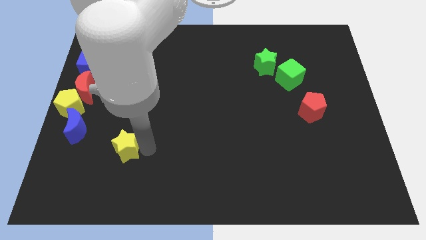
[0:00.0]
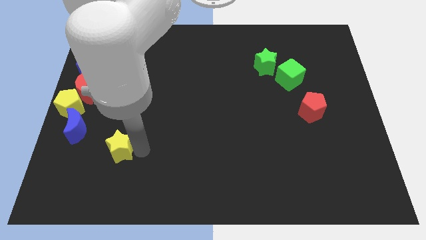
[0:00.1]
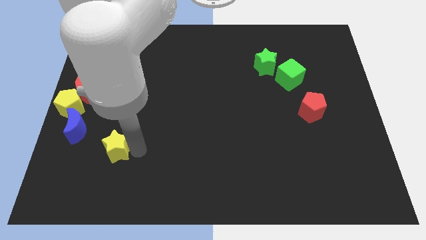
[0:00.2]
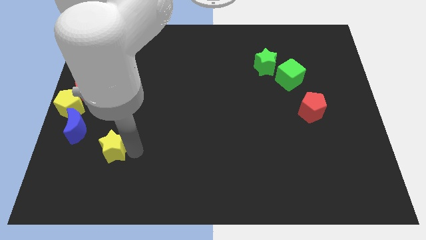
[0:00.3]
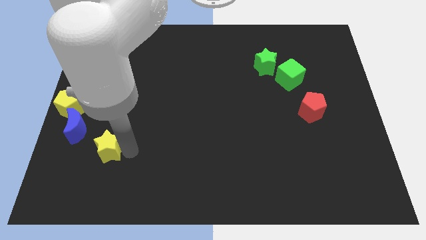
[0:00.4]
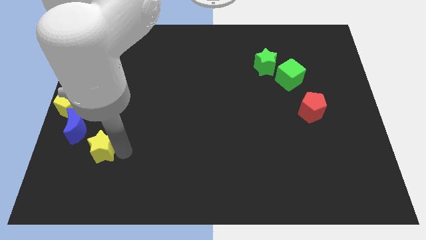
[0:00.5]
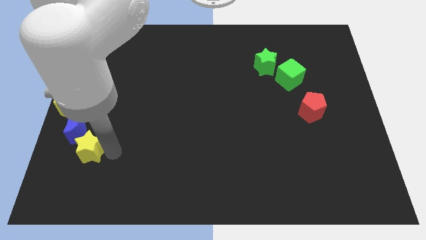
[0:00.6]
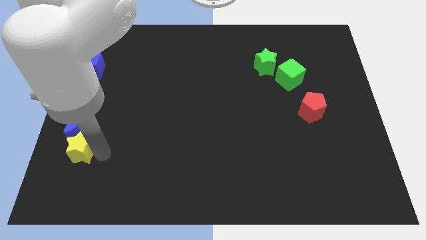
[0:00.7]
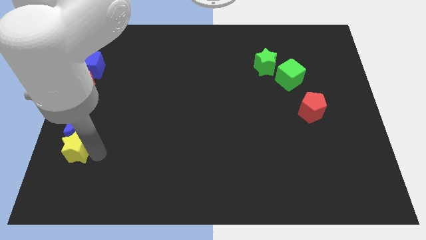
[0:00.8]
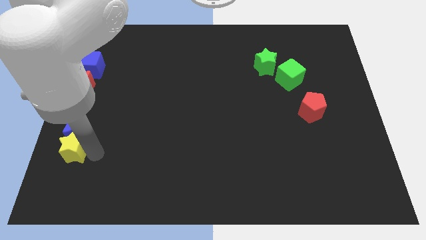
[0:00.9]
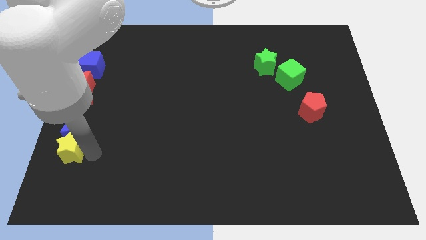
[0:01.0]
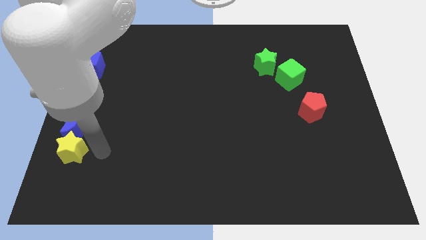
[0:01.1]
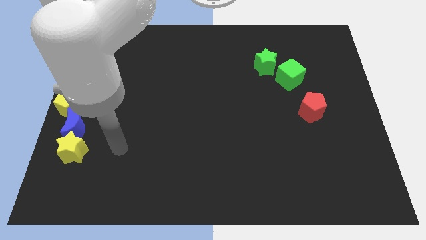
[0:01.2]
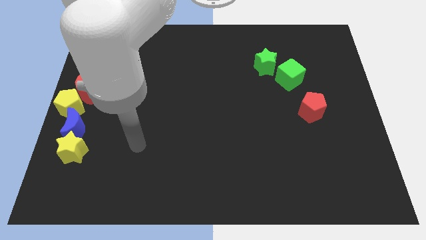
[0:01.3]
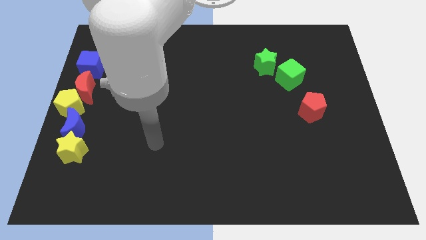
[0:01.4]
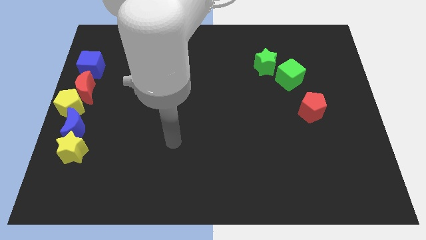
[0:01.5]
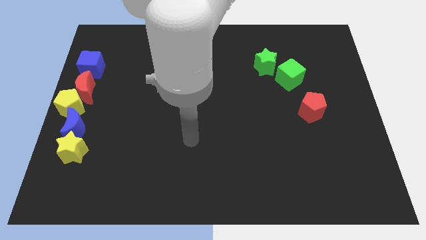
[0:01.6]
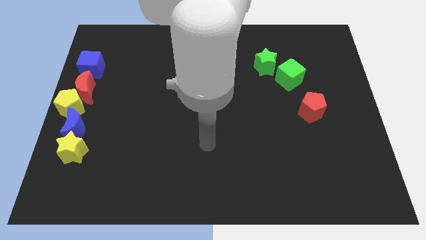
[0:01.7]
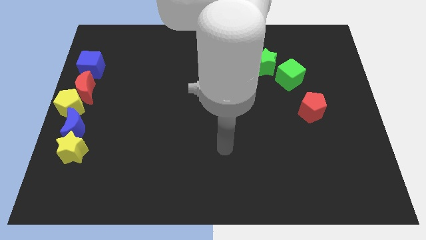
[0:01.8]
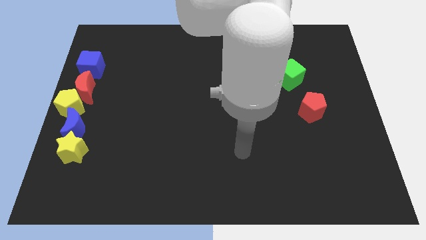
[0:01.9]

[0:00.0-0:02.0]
move the yellow star to the bottom of the blue crescent

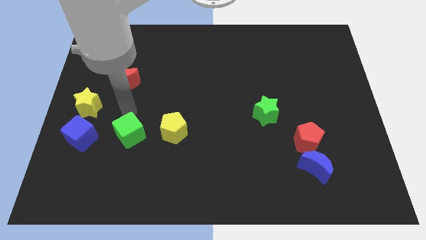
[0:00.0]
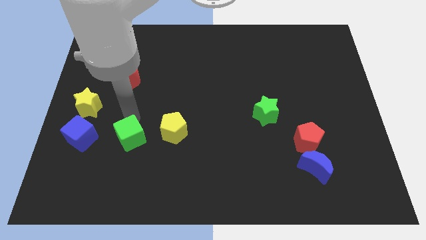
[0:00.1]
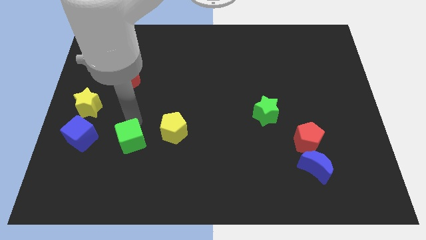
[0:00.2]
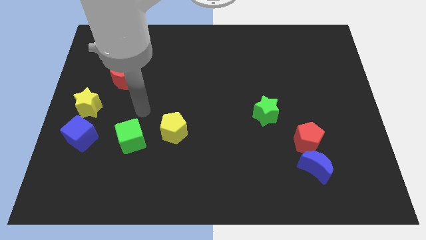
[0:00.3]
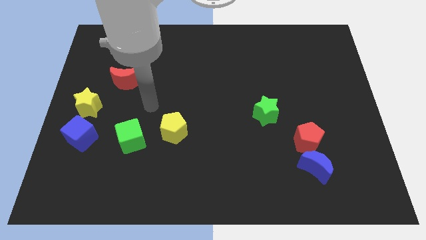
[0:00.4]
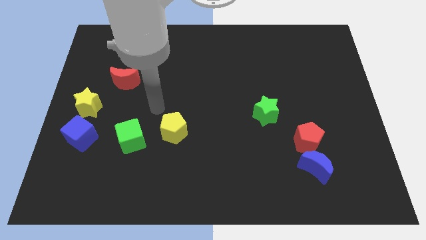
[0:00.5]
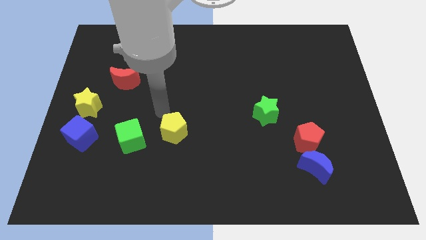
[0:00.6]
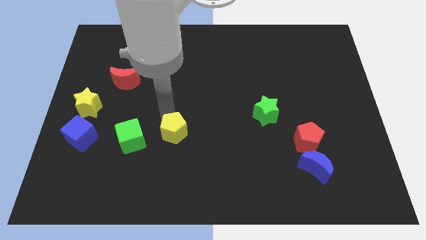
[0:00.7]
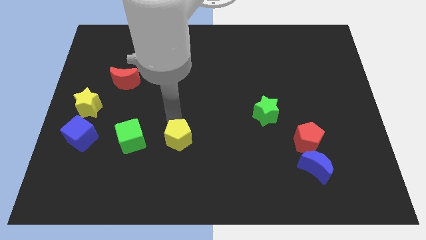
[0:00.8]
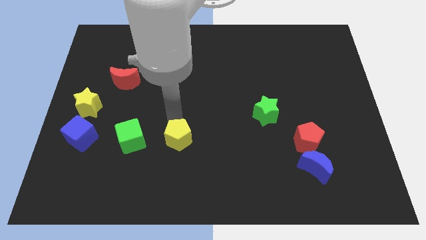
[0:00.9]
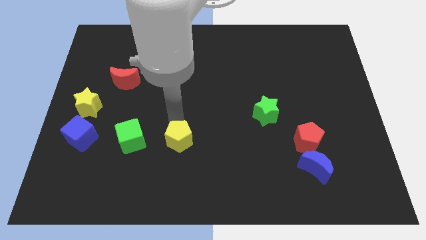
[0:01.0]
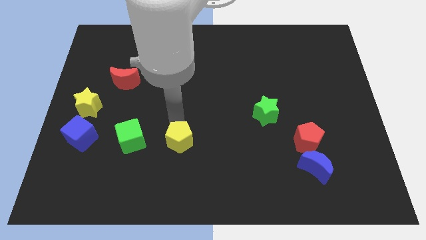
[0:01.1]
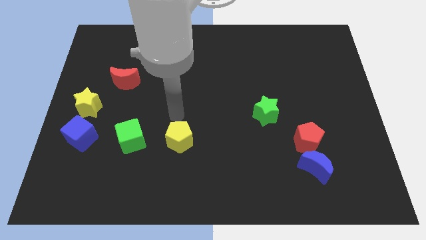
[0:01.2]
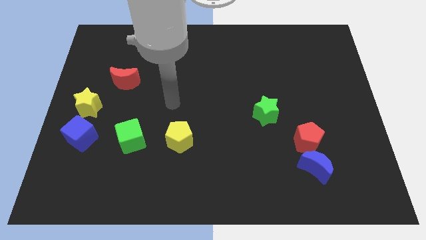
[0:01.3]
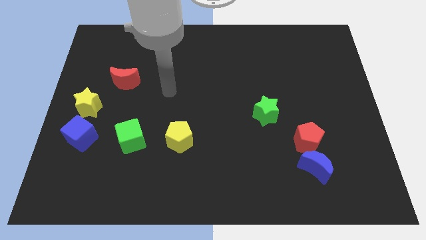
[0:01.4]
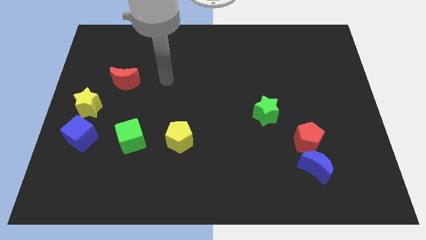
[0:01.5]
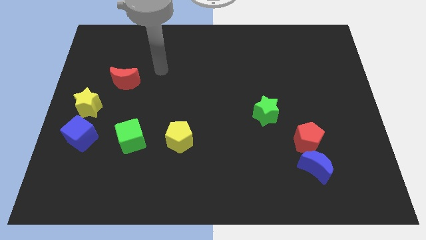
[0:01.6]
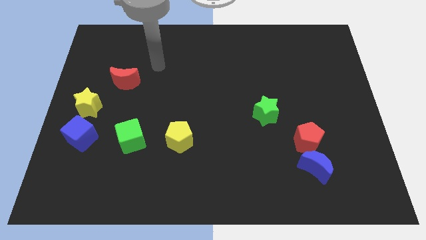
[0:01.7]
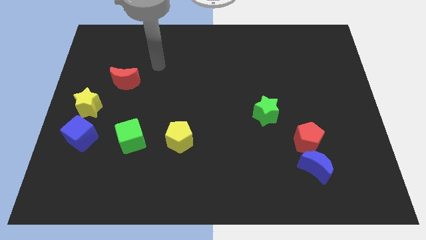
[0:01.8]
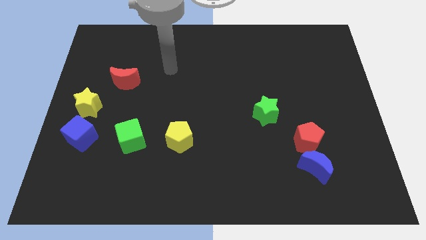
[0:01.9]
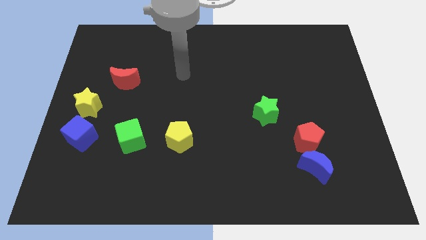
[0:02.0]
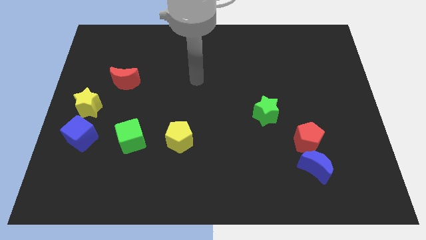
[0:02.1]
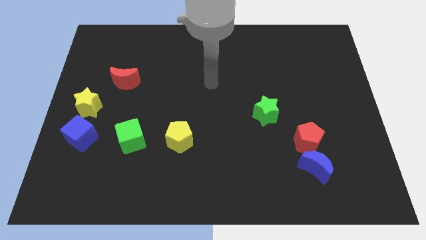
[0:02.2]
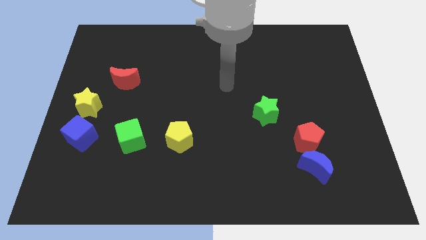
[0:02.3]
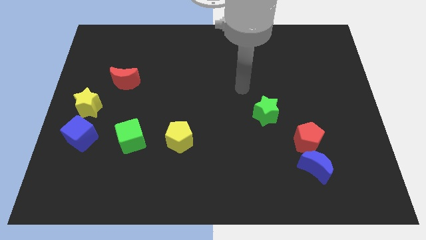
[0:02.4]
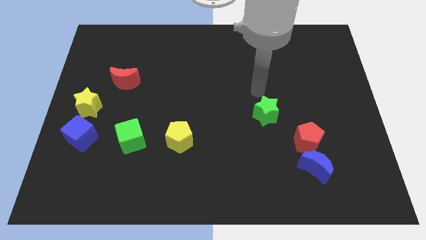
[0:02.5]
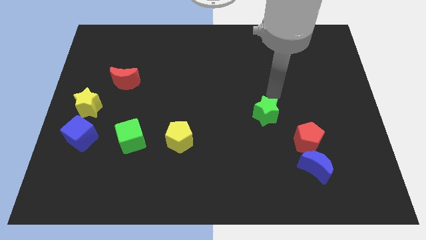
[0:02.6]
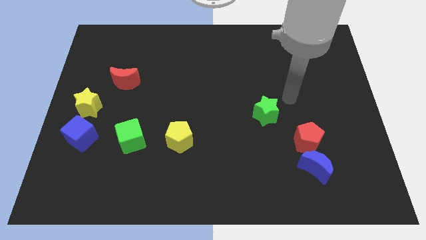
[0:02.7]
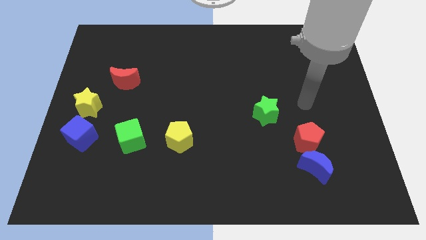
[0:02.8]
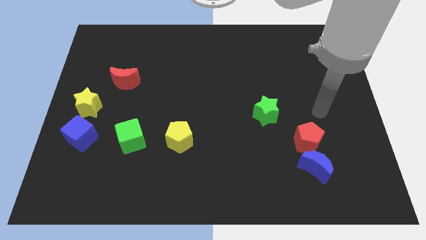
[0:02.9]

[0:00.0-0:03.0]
push the yellow pentagon slightly to the bottom of the board

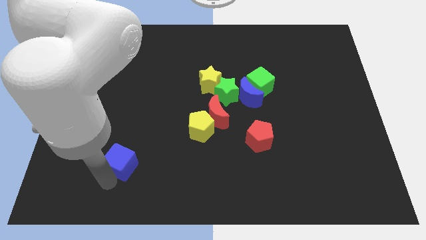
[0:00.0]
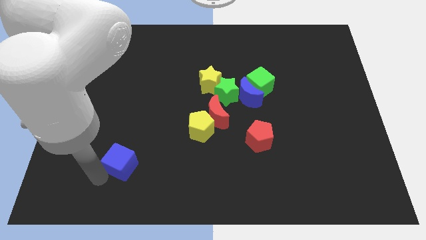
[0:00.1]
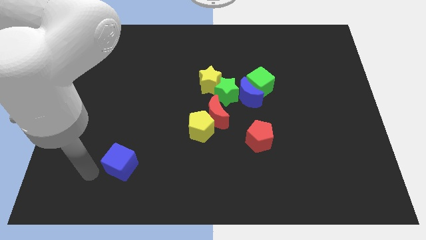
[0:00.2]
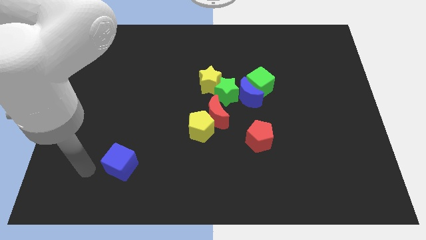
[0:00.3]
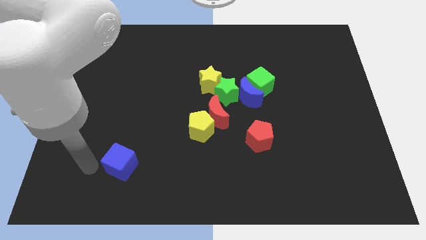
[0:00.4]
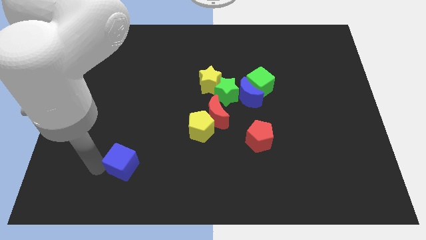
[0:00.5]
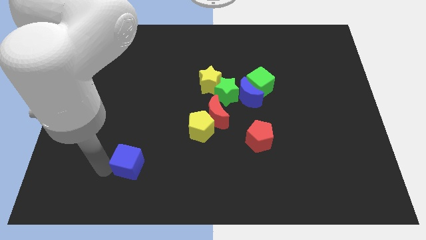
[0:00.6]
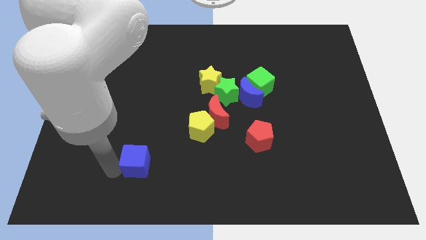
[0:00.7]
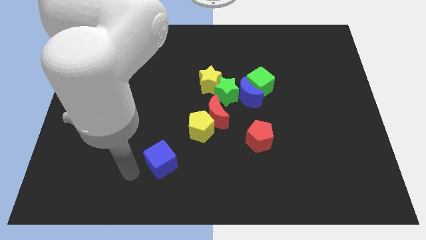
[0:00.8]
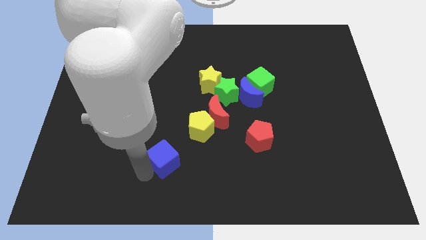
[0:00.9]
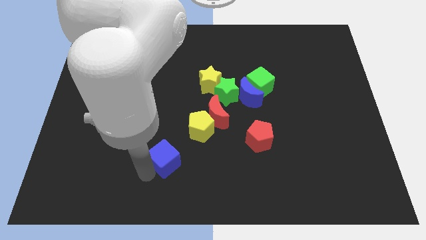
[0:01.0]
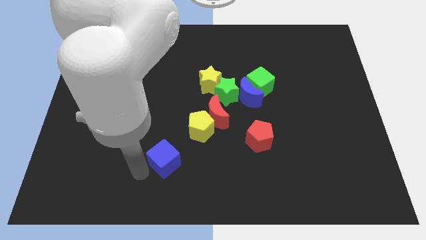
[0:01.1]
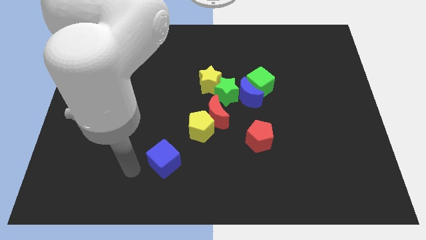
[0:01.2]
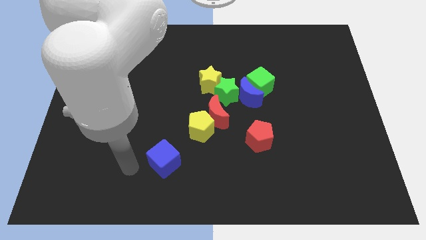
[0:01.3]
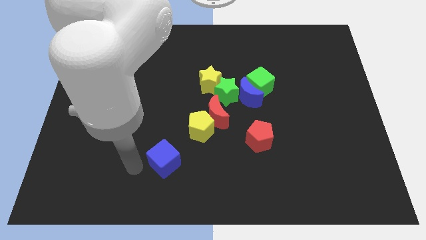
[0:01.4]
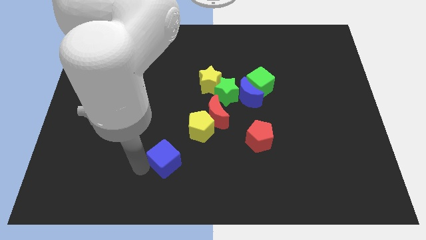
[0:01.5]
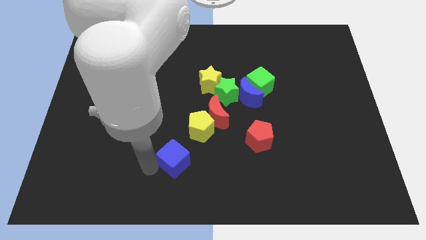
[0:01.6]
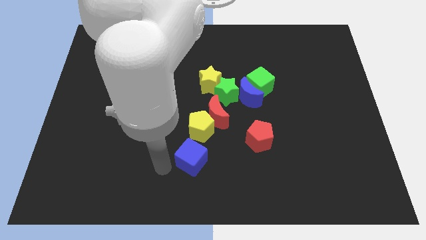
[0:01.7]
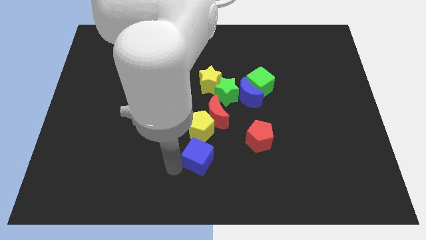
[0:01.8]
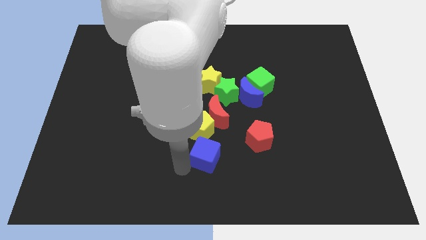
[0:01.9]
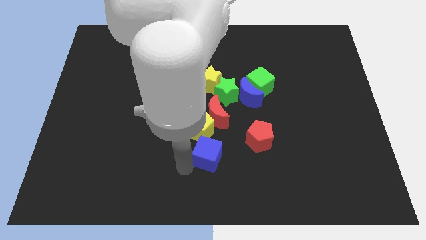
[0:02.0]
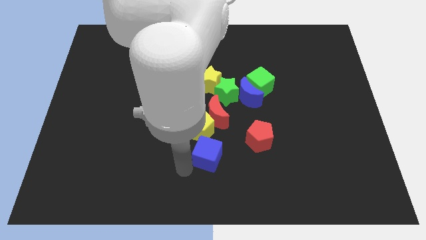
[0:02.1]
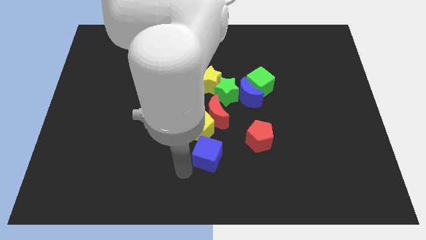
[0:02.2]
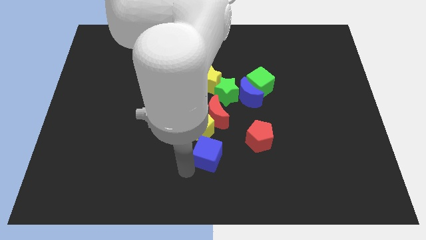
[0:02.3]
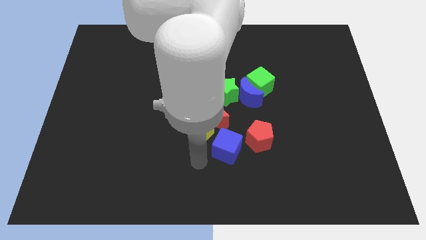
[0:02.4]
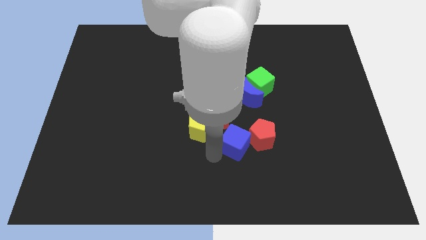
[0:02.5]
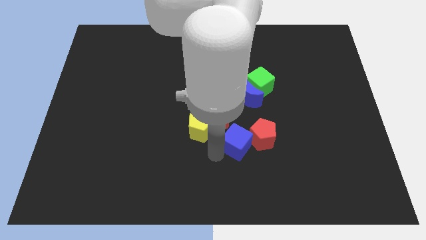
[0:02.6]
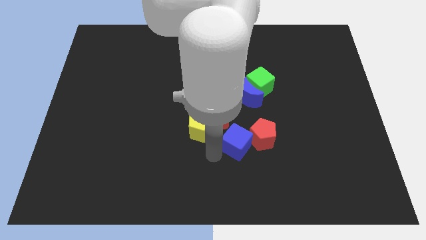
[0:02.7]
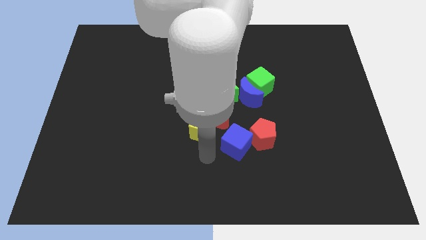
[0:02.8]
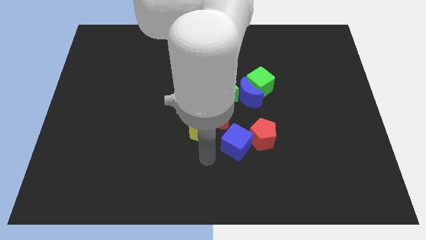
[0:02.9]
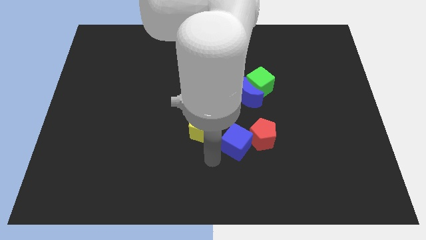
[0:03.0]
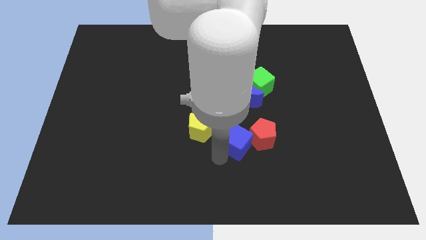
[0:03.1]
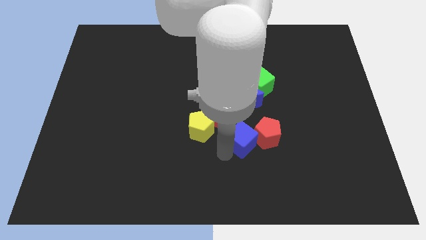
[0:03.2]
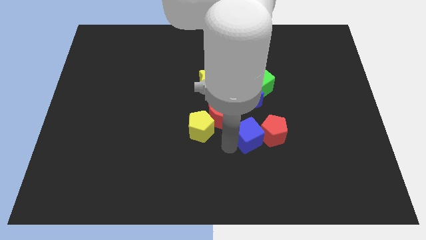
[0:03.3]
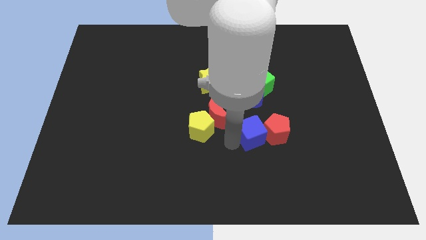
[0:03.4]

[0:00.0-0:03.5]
move blue cube beside red pentagon

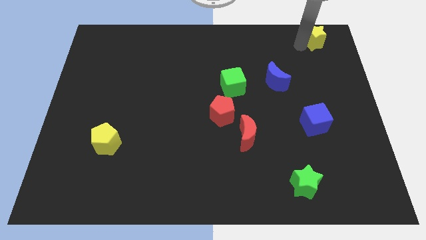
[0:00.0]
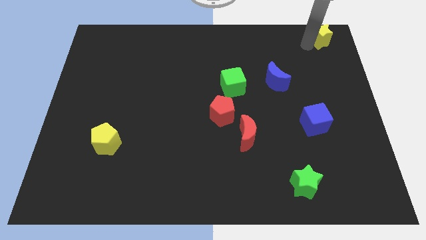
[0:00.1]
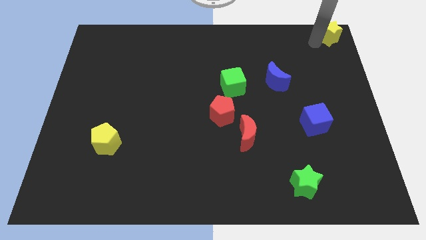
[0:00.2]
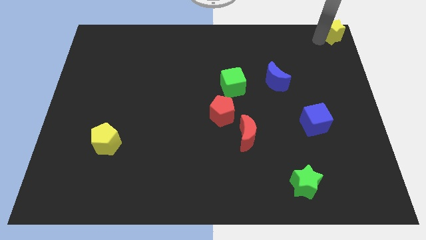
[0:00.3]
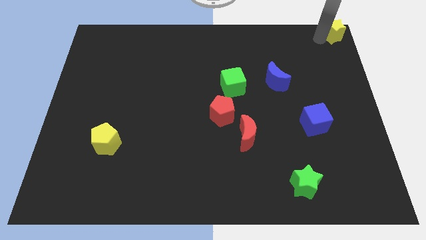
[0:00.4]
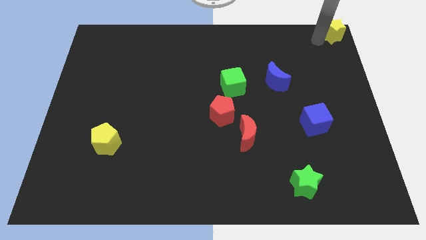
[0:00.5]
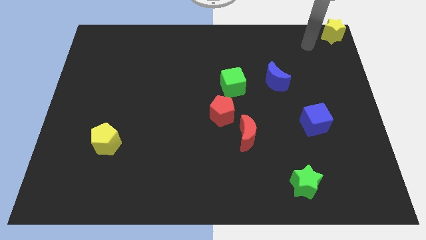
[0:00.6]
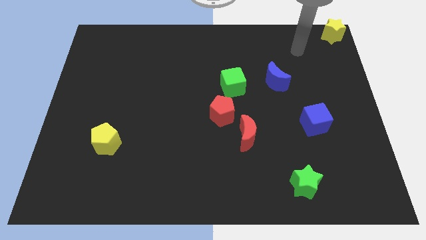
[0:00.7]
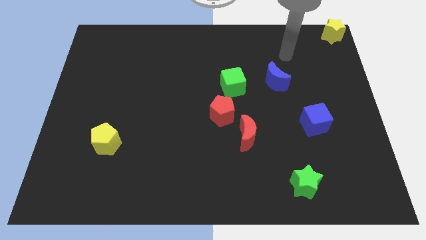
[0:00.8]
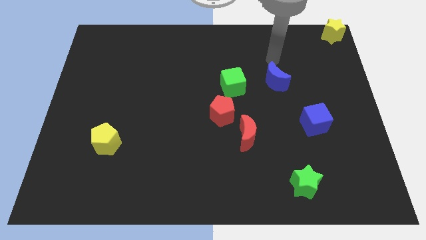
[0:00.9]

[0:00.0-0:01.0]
move yellow star to top right of the board
